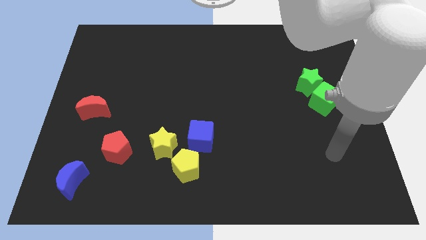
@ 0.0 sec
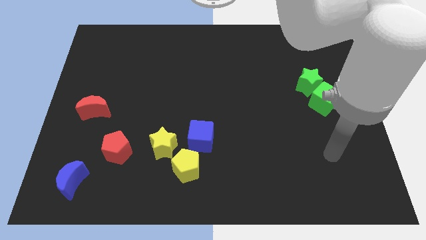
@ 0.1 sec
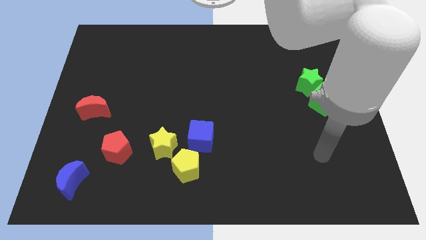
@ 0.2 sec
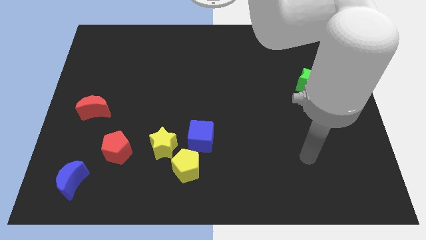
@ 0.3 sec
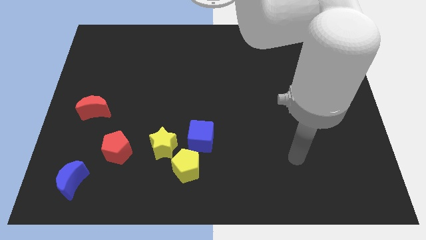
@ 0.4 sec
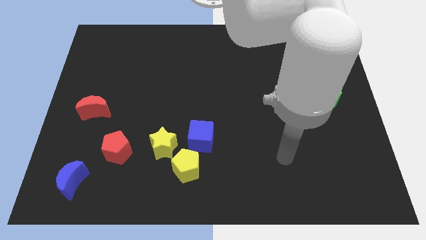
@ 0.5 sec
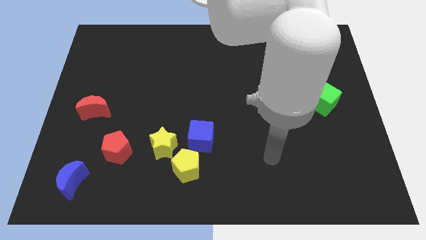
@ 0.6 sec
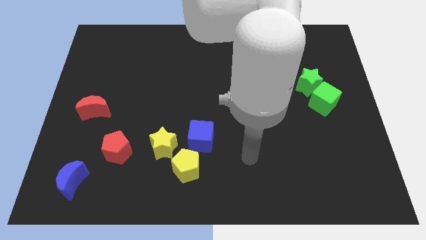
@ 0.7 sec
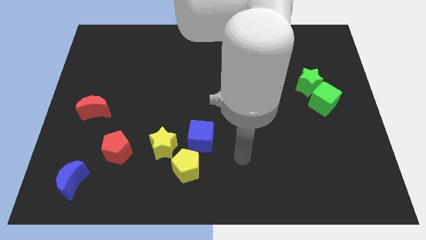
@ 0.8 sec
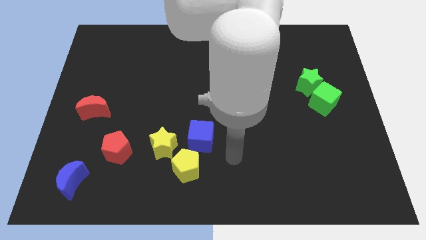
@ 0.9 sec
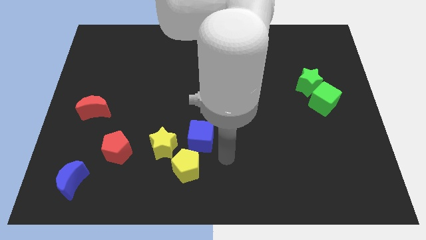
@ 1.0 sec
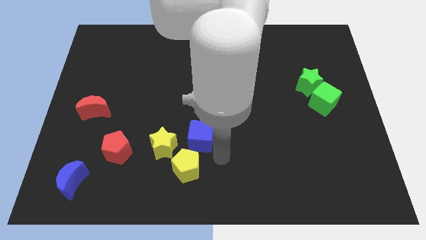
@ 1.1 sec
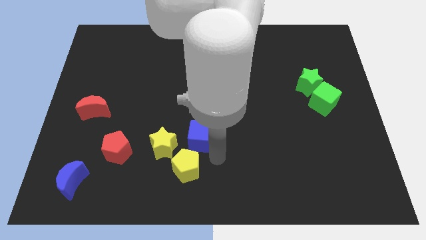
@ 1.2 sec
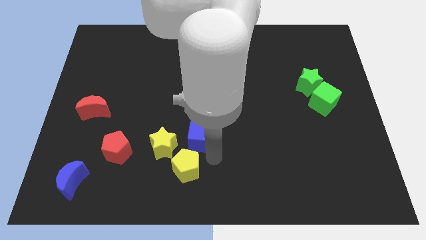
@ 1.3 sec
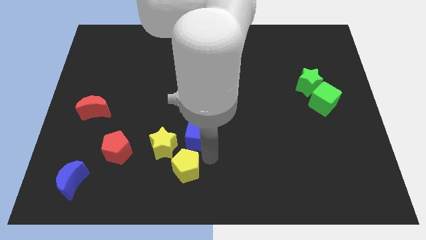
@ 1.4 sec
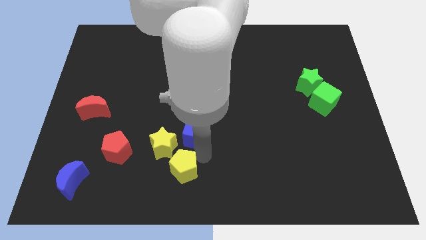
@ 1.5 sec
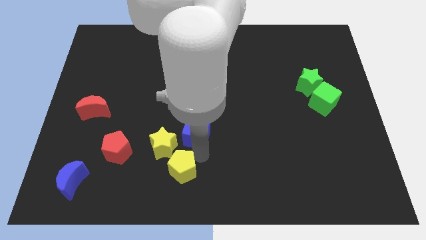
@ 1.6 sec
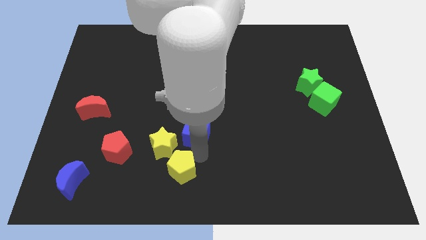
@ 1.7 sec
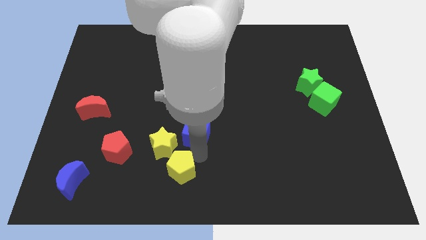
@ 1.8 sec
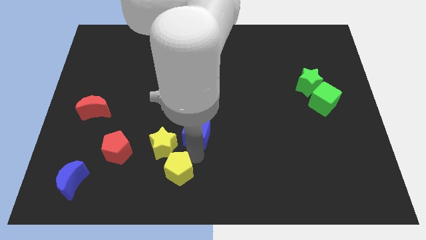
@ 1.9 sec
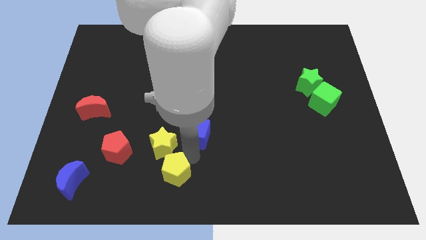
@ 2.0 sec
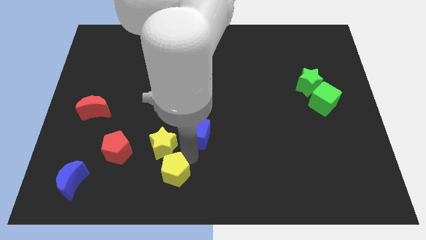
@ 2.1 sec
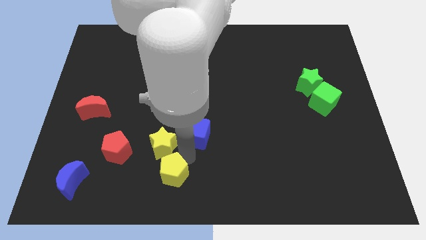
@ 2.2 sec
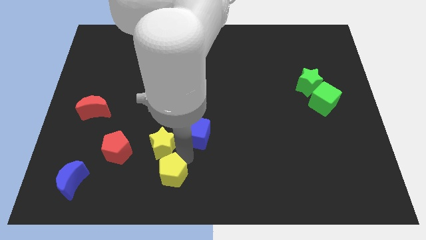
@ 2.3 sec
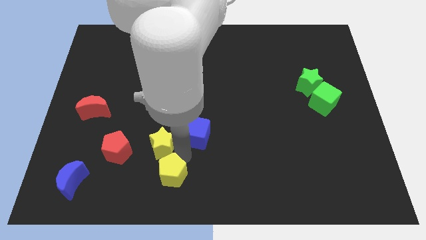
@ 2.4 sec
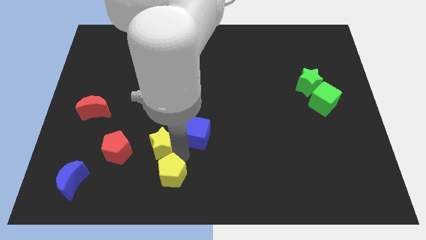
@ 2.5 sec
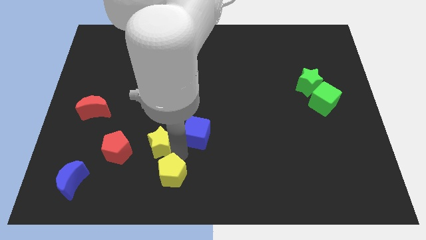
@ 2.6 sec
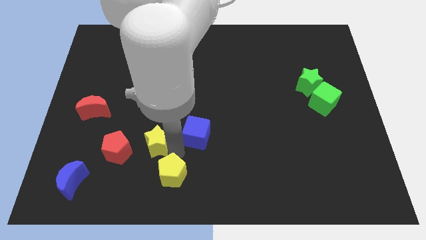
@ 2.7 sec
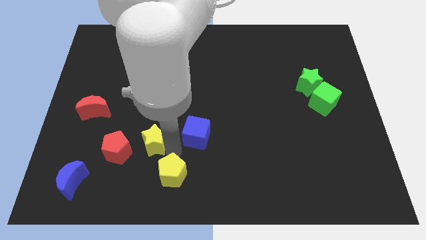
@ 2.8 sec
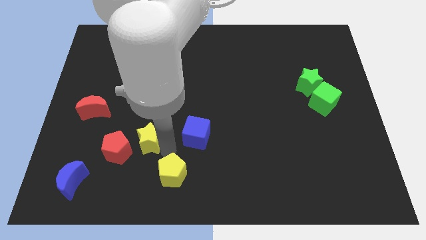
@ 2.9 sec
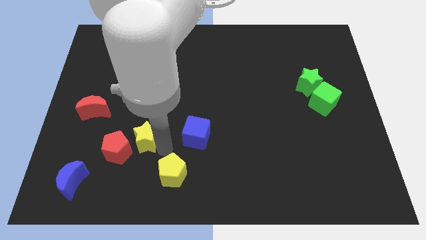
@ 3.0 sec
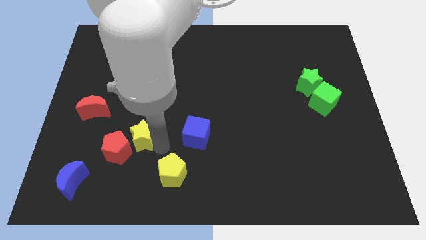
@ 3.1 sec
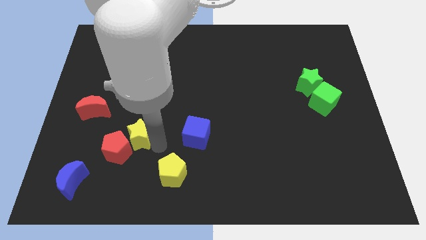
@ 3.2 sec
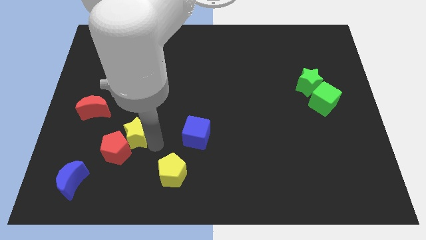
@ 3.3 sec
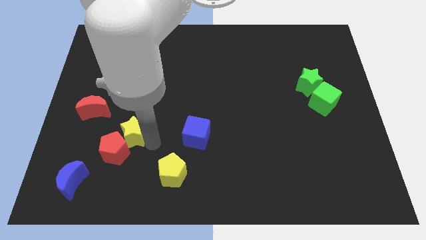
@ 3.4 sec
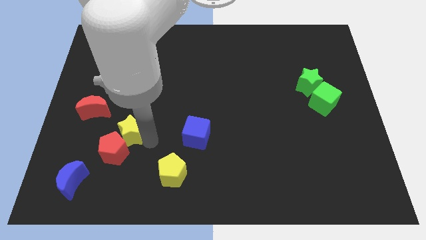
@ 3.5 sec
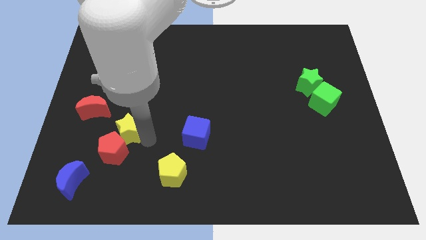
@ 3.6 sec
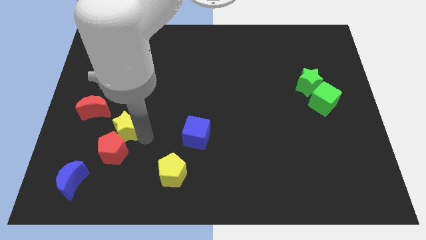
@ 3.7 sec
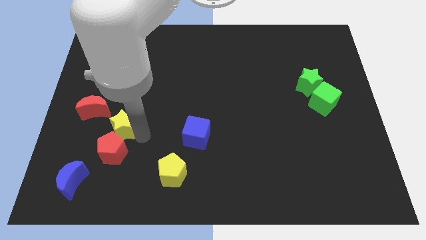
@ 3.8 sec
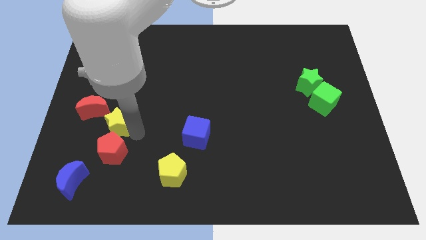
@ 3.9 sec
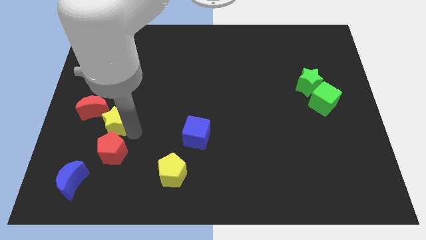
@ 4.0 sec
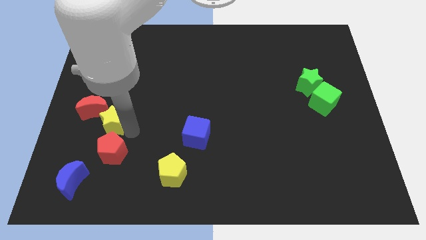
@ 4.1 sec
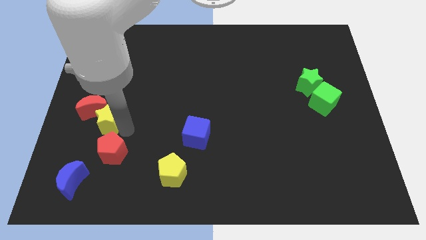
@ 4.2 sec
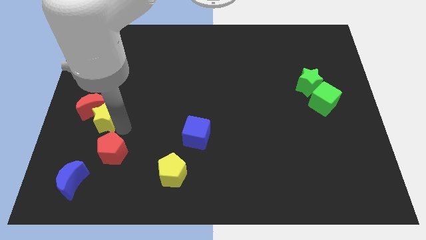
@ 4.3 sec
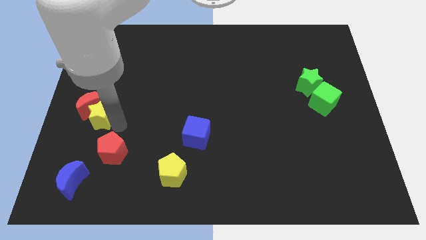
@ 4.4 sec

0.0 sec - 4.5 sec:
push the yellow star towards the red moon

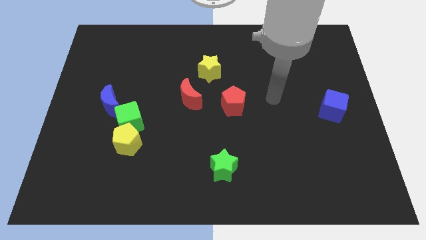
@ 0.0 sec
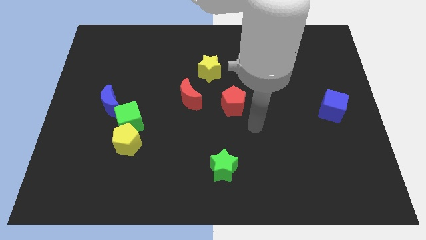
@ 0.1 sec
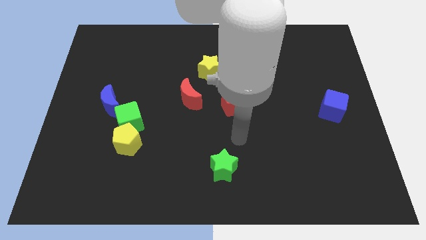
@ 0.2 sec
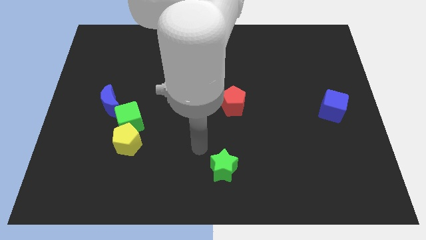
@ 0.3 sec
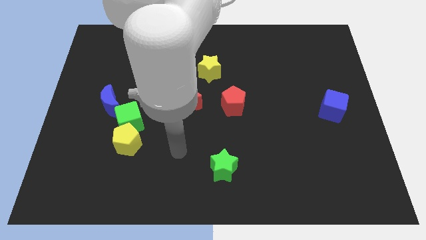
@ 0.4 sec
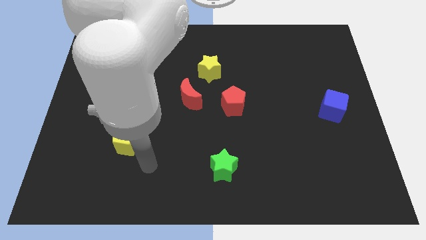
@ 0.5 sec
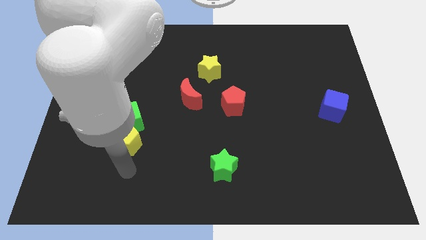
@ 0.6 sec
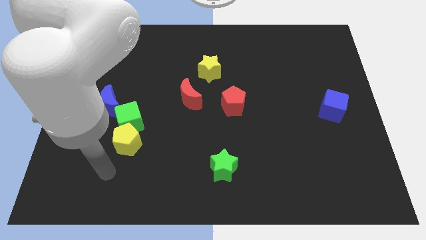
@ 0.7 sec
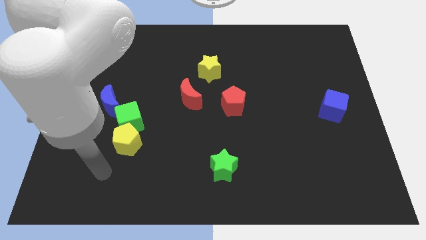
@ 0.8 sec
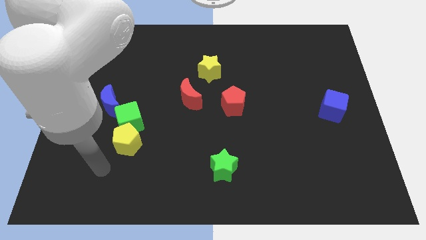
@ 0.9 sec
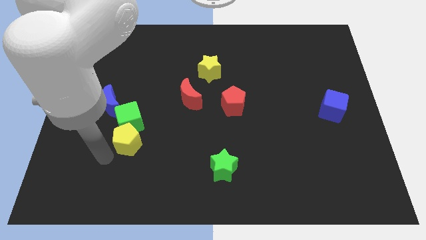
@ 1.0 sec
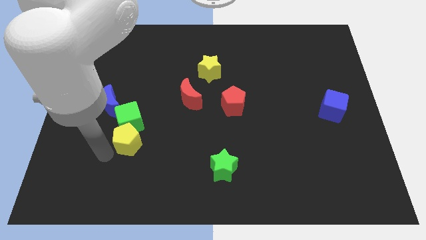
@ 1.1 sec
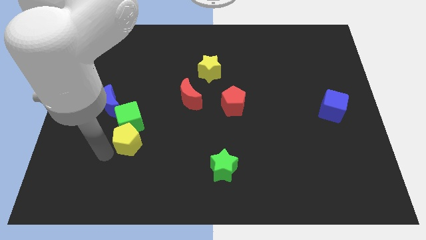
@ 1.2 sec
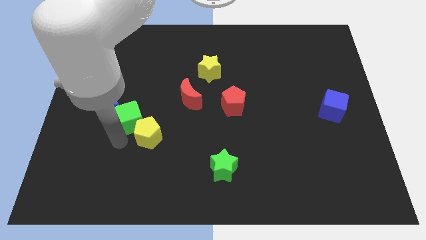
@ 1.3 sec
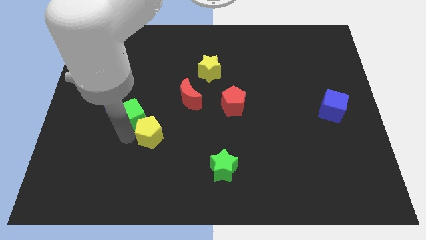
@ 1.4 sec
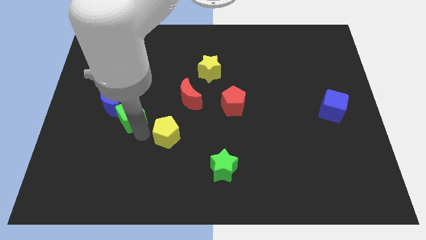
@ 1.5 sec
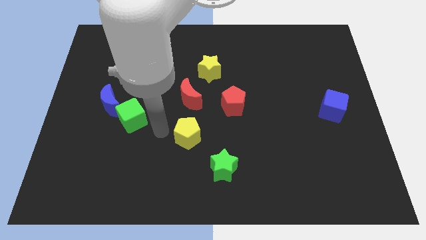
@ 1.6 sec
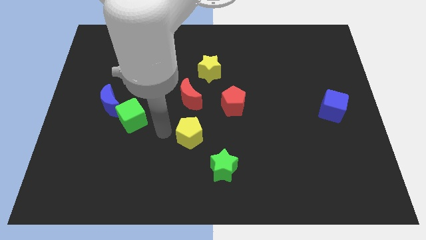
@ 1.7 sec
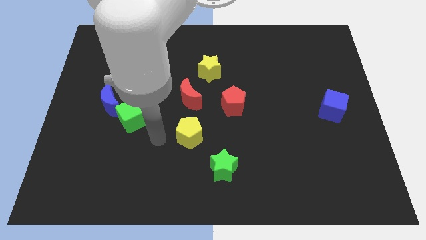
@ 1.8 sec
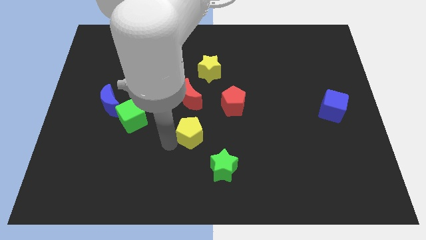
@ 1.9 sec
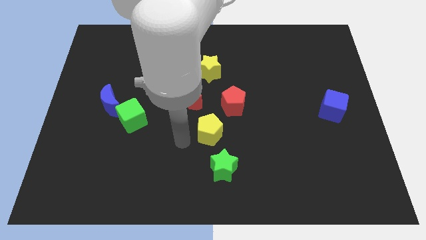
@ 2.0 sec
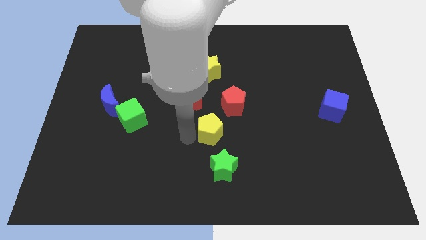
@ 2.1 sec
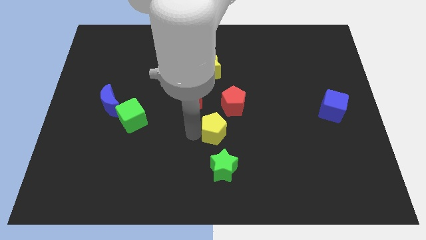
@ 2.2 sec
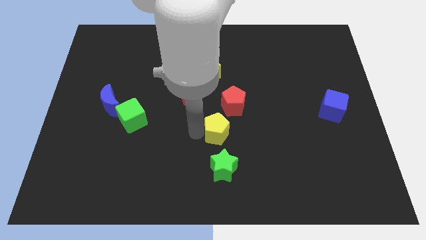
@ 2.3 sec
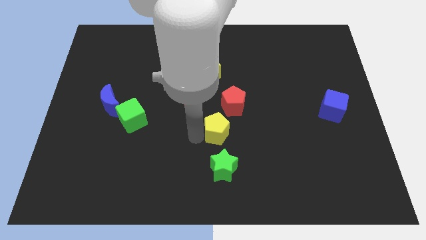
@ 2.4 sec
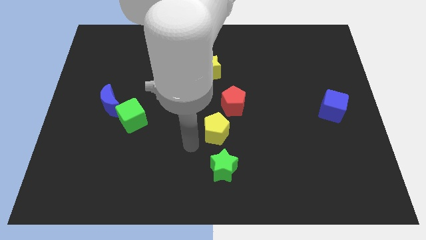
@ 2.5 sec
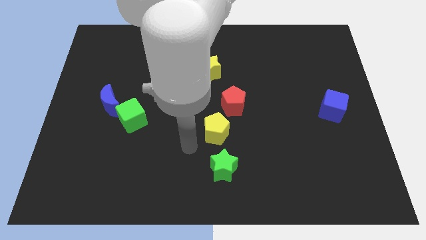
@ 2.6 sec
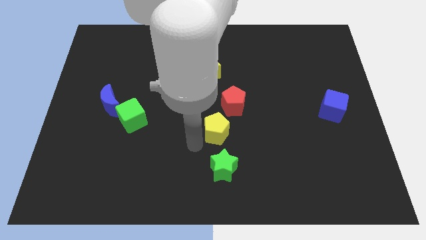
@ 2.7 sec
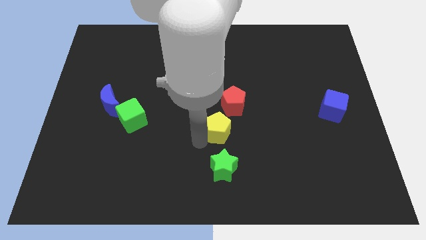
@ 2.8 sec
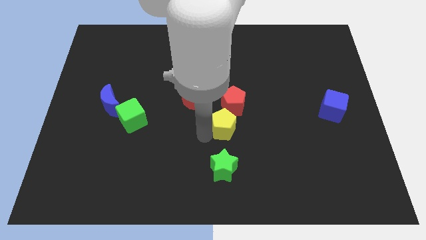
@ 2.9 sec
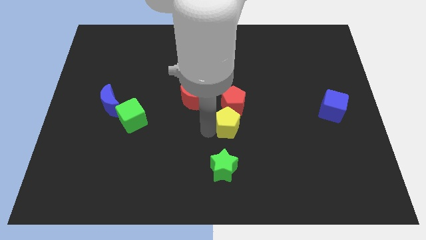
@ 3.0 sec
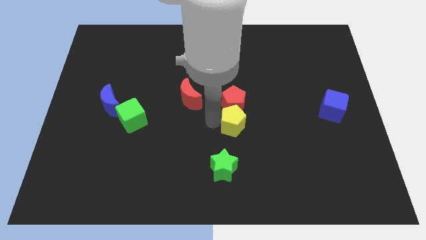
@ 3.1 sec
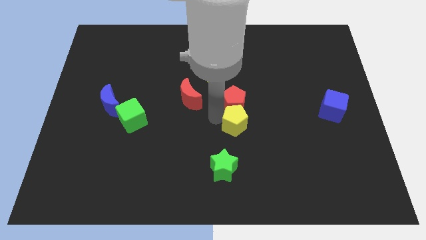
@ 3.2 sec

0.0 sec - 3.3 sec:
put the yellow pentagon to the red pentagon

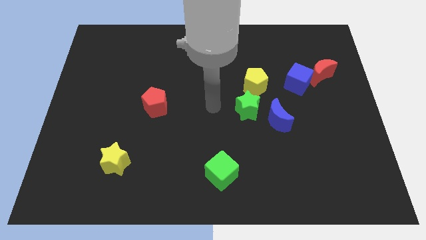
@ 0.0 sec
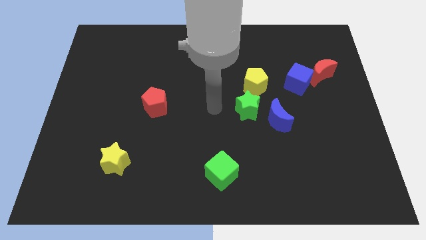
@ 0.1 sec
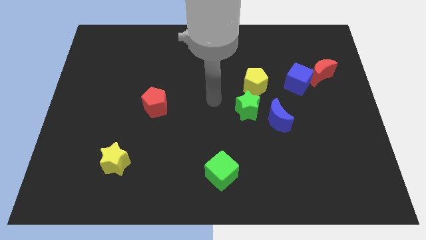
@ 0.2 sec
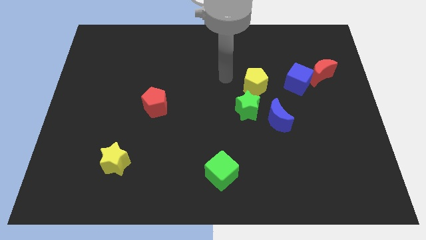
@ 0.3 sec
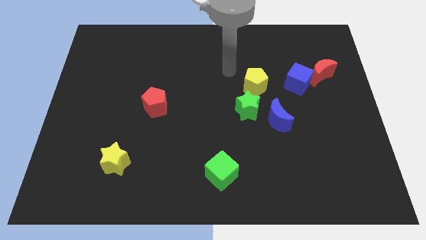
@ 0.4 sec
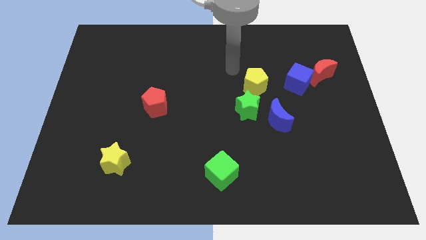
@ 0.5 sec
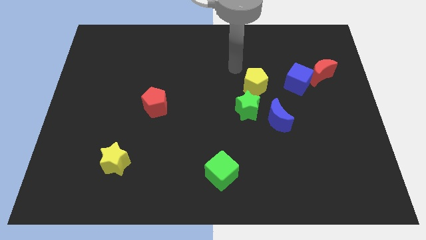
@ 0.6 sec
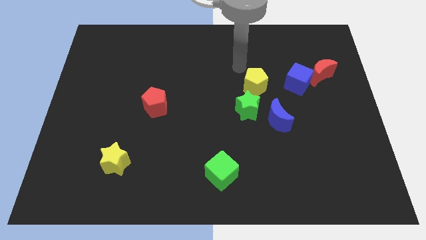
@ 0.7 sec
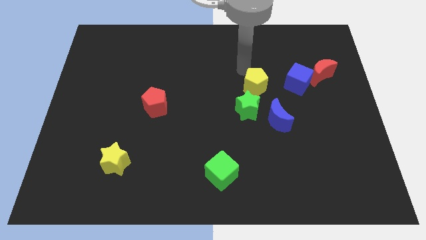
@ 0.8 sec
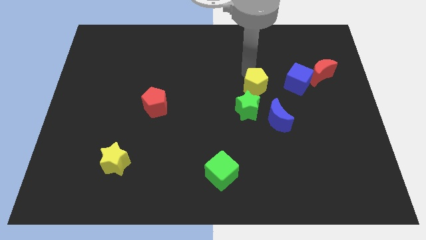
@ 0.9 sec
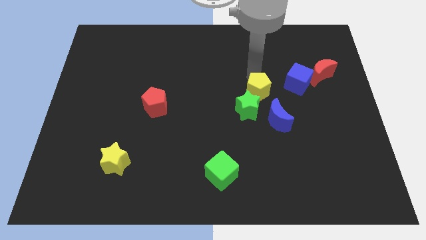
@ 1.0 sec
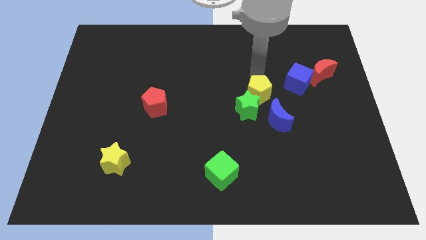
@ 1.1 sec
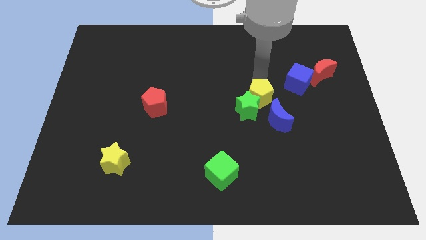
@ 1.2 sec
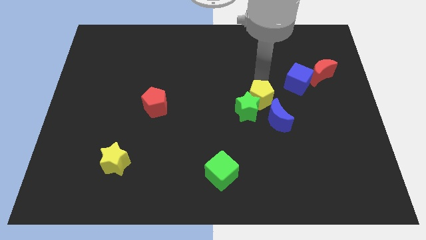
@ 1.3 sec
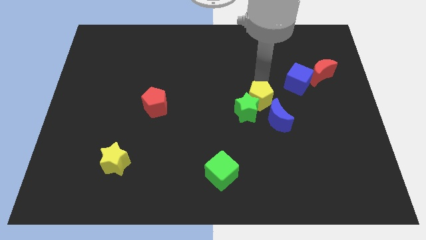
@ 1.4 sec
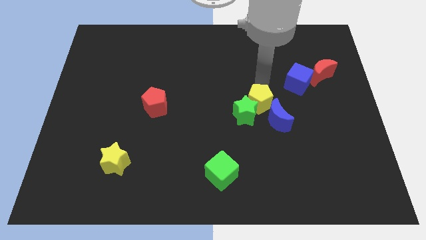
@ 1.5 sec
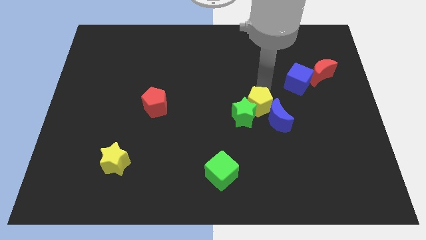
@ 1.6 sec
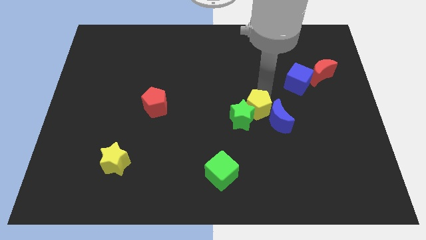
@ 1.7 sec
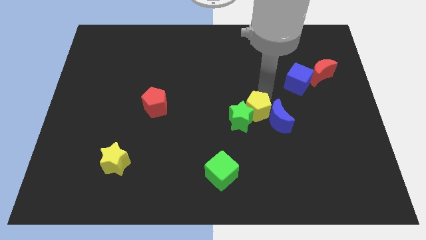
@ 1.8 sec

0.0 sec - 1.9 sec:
slide the yellow pentagon close to the blue moon
